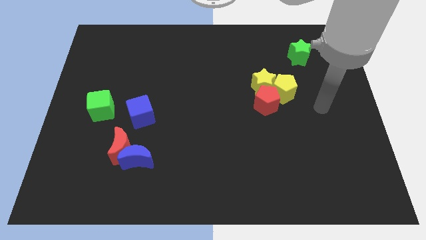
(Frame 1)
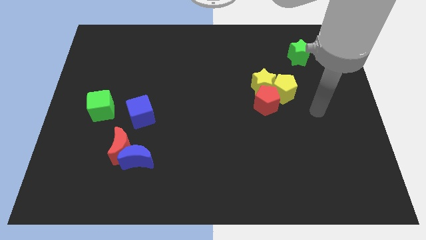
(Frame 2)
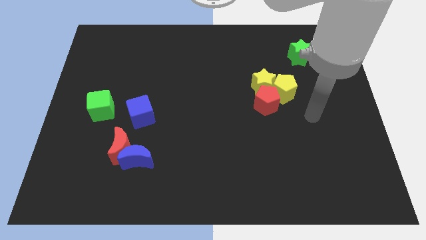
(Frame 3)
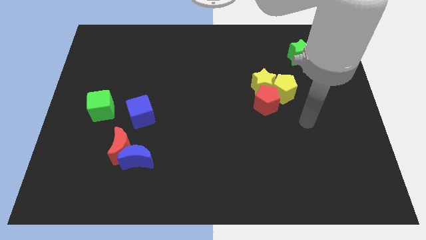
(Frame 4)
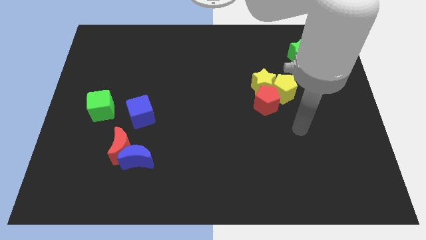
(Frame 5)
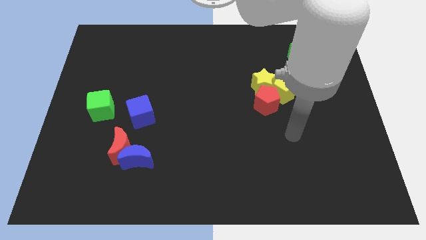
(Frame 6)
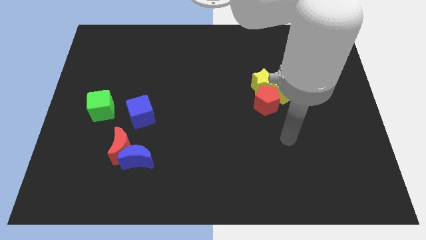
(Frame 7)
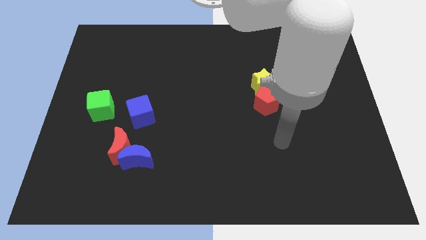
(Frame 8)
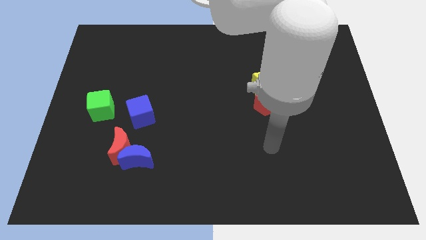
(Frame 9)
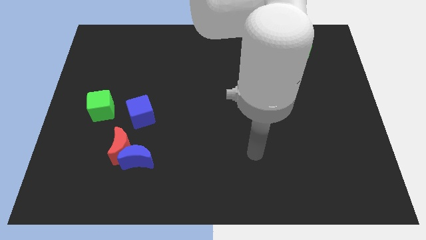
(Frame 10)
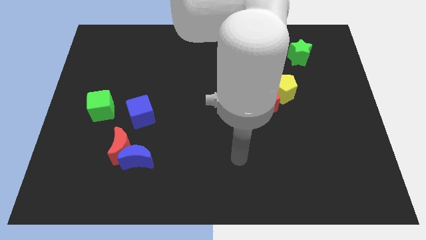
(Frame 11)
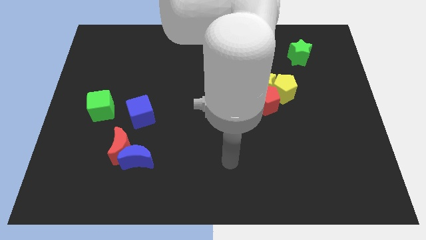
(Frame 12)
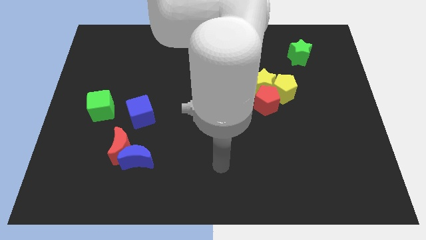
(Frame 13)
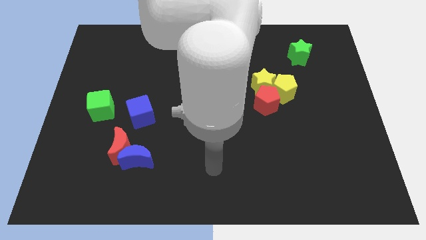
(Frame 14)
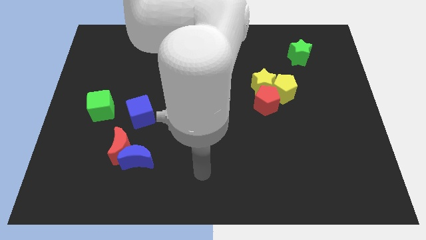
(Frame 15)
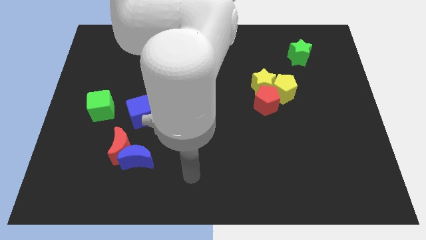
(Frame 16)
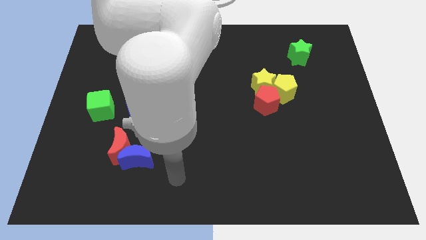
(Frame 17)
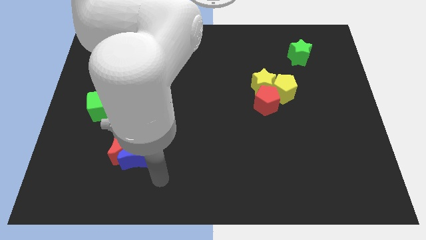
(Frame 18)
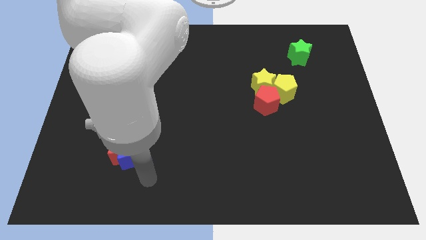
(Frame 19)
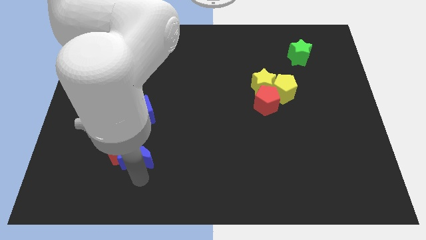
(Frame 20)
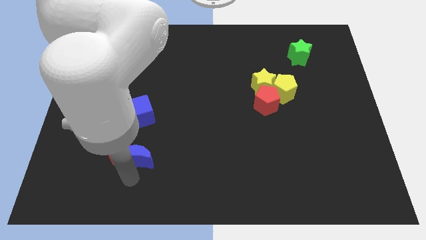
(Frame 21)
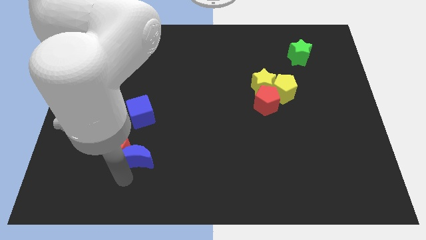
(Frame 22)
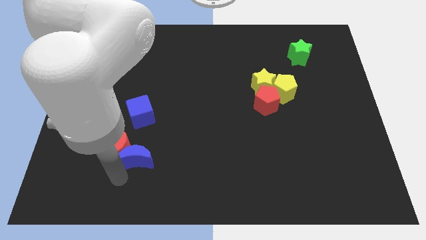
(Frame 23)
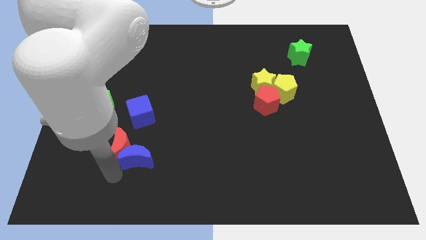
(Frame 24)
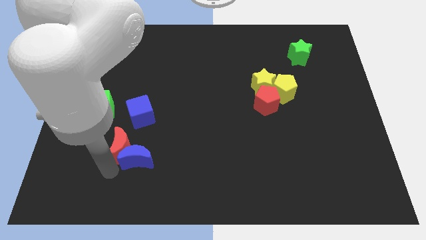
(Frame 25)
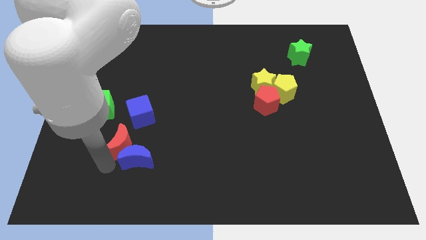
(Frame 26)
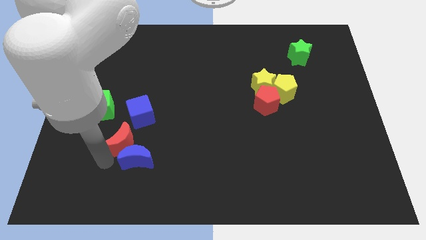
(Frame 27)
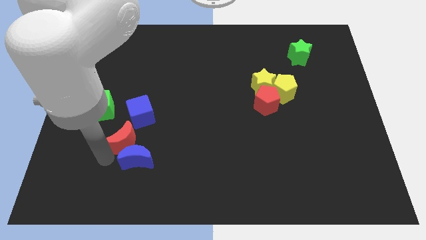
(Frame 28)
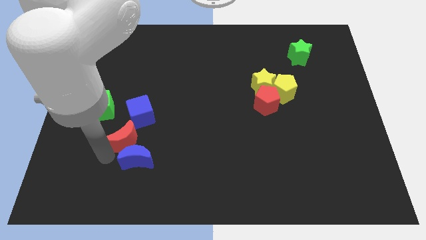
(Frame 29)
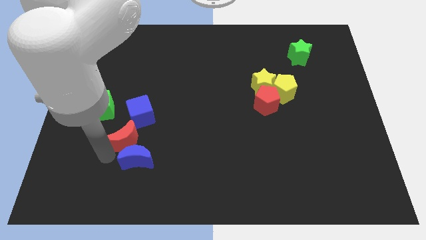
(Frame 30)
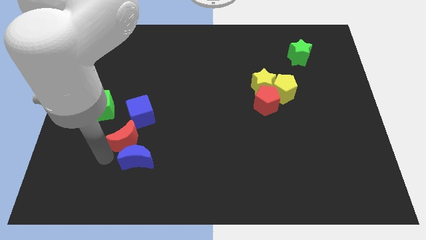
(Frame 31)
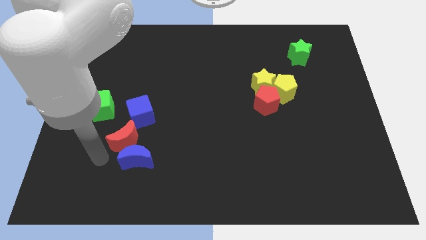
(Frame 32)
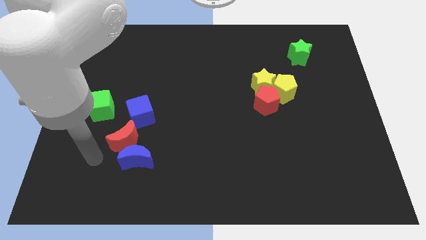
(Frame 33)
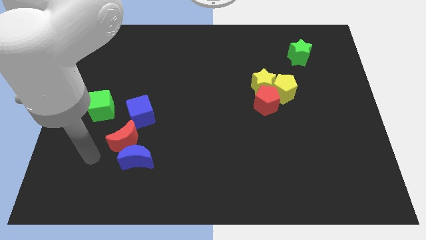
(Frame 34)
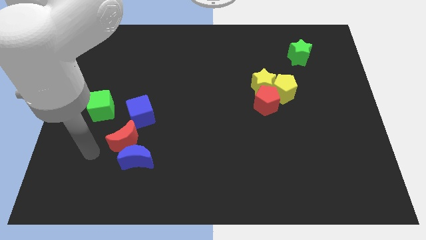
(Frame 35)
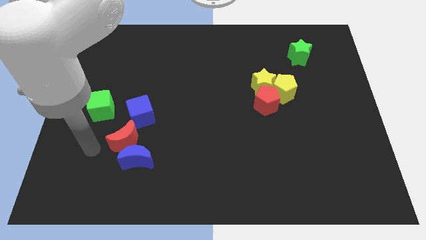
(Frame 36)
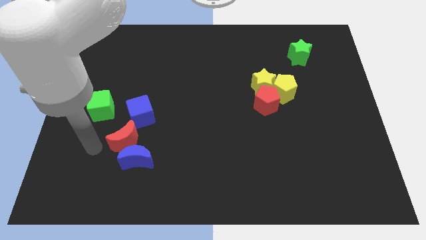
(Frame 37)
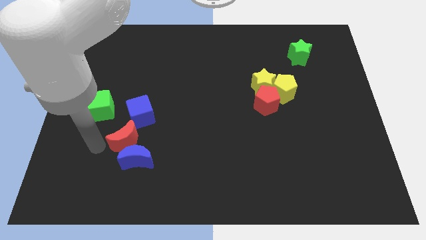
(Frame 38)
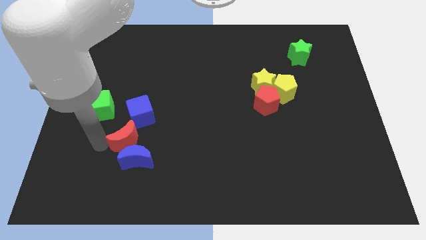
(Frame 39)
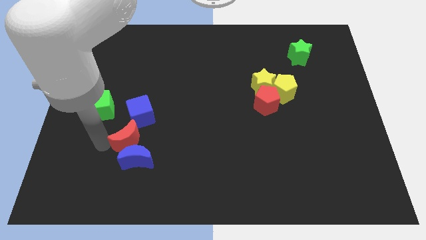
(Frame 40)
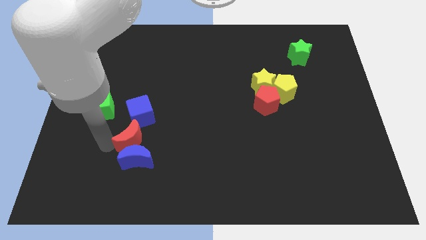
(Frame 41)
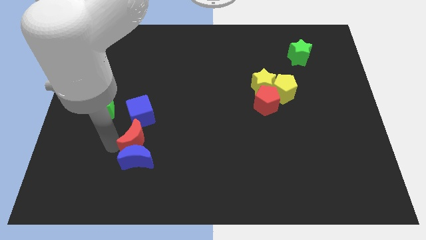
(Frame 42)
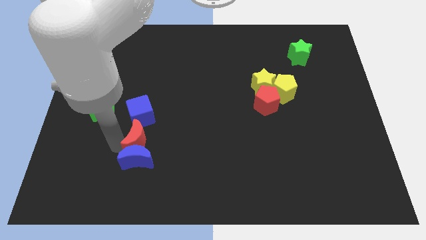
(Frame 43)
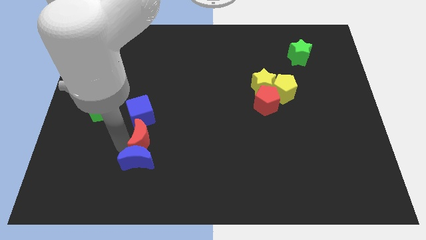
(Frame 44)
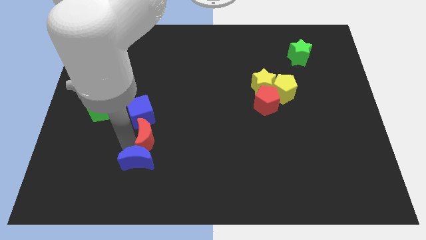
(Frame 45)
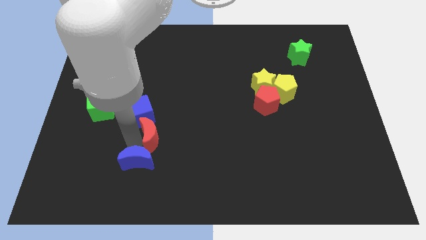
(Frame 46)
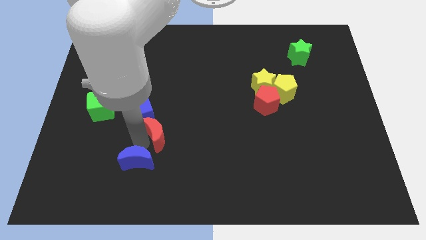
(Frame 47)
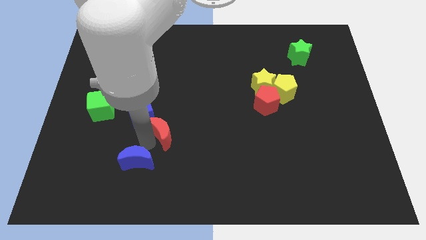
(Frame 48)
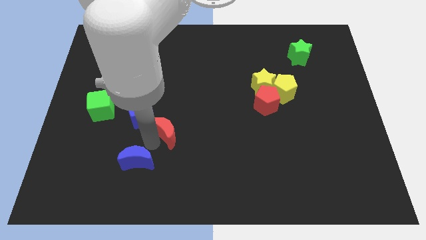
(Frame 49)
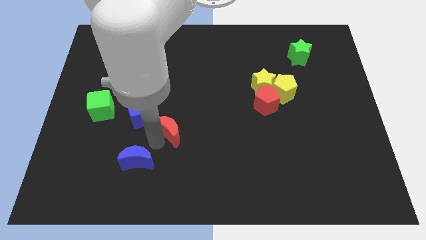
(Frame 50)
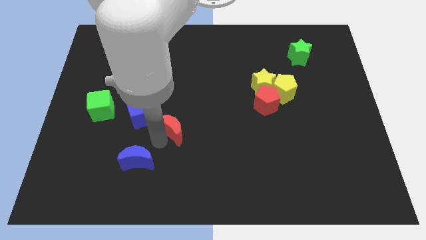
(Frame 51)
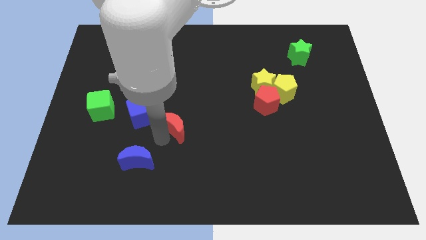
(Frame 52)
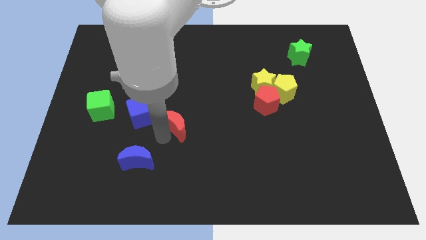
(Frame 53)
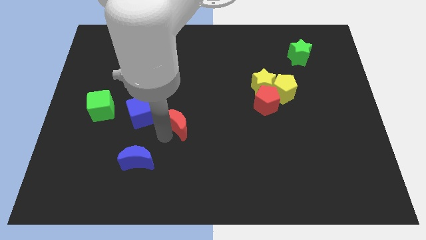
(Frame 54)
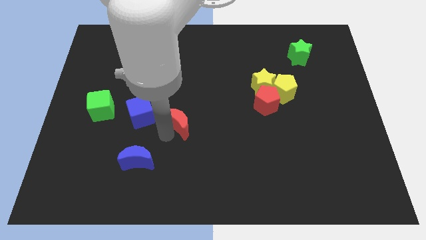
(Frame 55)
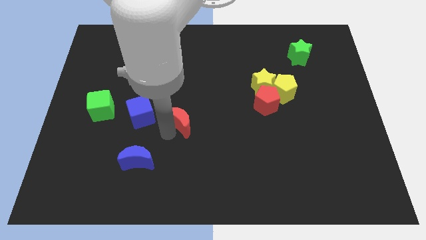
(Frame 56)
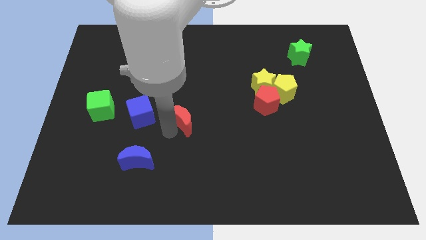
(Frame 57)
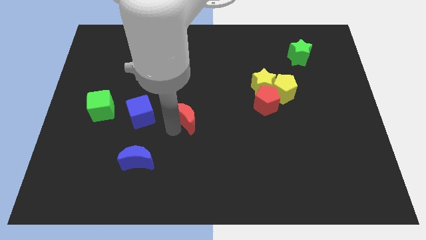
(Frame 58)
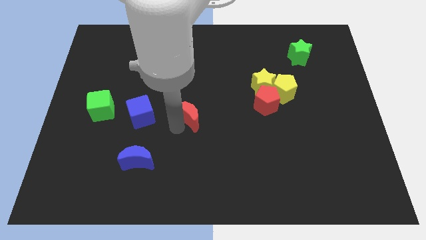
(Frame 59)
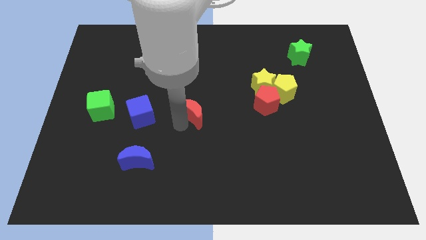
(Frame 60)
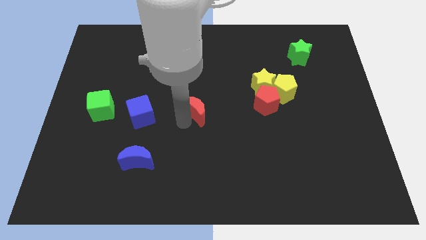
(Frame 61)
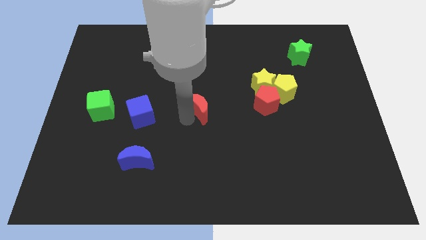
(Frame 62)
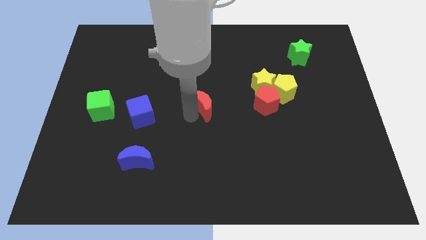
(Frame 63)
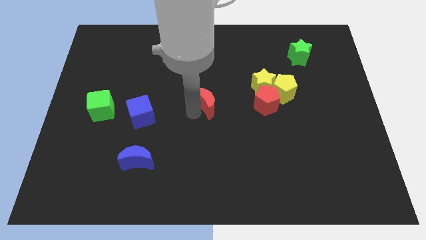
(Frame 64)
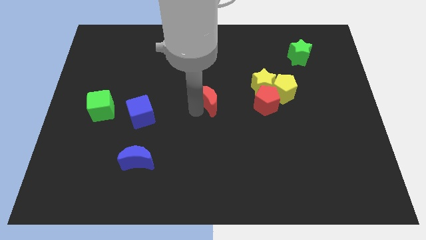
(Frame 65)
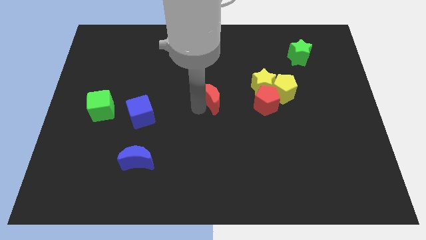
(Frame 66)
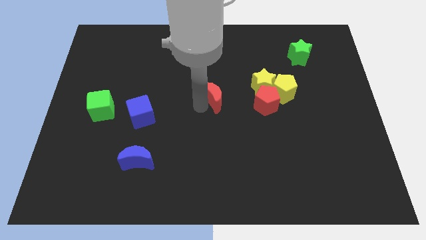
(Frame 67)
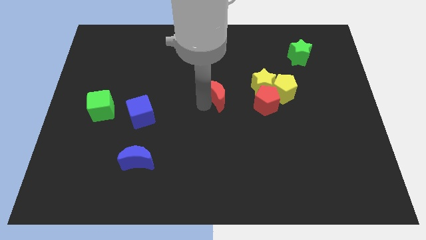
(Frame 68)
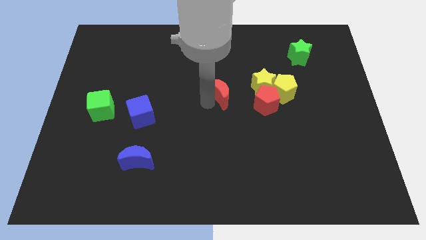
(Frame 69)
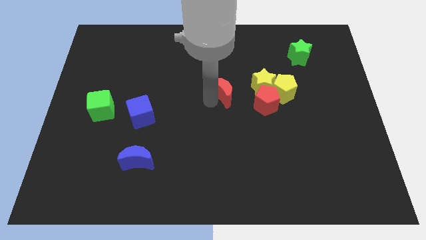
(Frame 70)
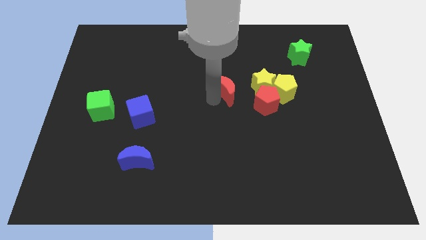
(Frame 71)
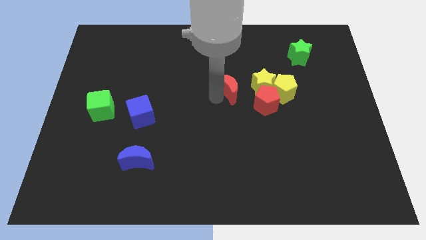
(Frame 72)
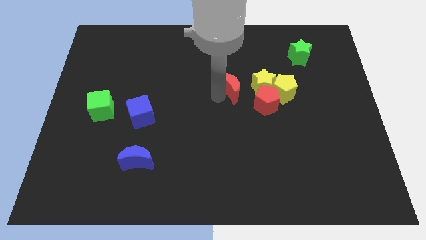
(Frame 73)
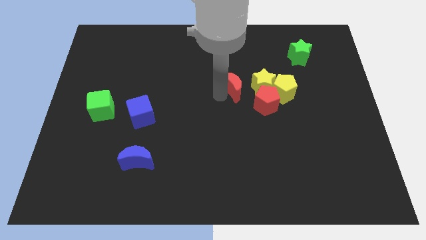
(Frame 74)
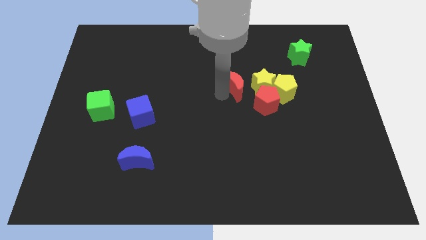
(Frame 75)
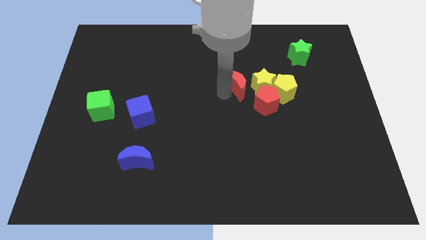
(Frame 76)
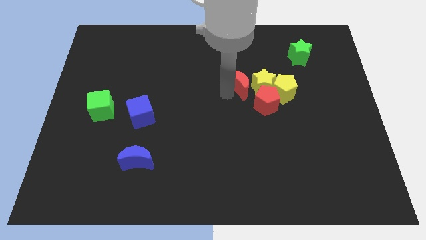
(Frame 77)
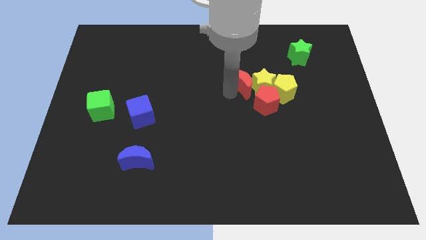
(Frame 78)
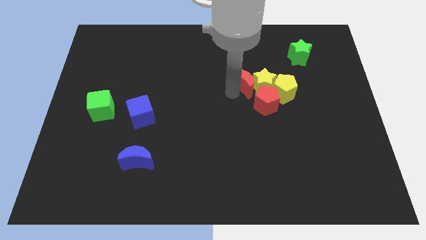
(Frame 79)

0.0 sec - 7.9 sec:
push the red moon to the yellow star

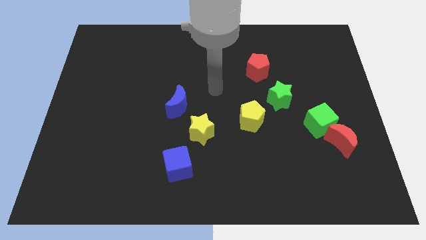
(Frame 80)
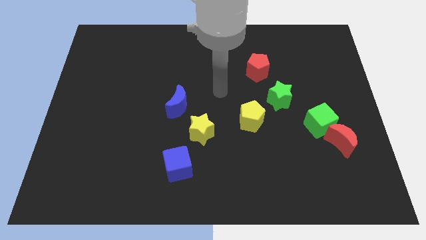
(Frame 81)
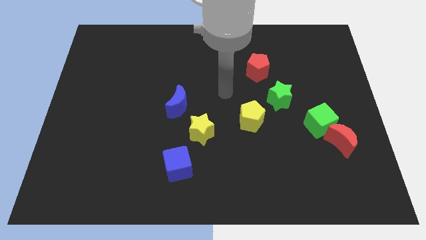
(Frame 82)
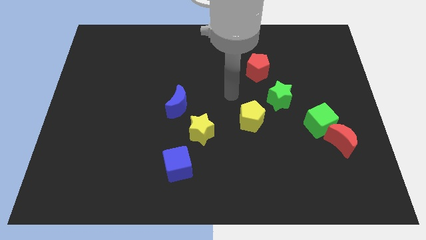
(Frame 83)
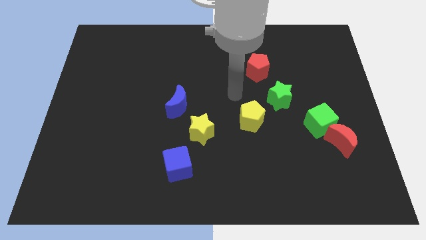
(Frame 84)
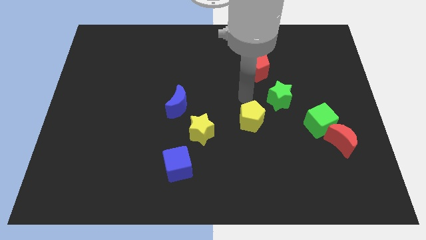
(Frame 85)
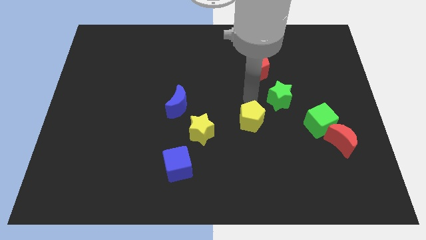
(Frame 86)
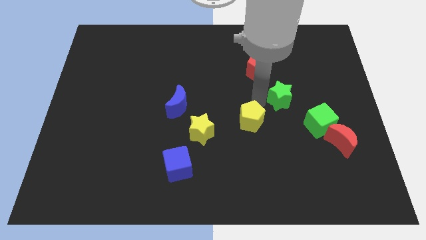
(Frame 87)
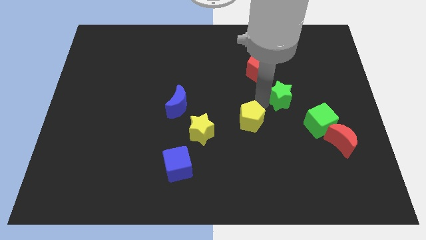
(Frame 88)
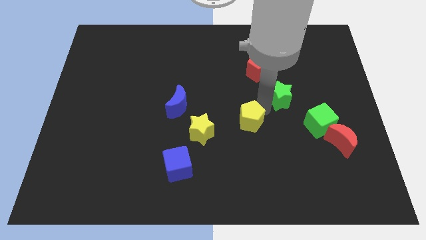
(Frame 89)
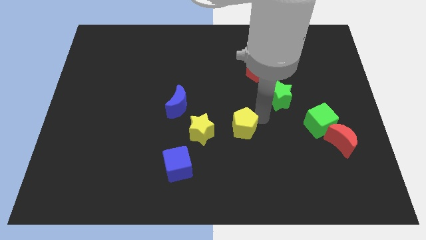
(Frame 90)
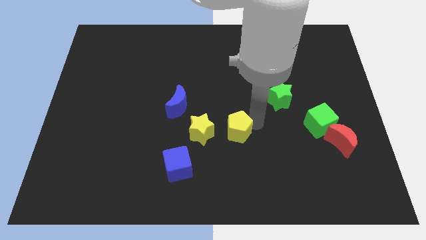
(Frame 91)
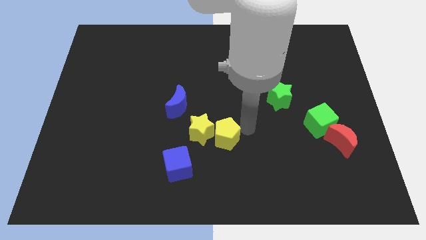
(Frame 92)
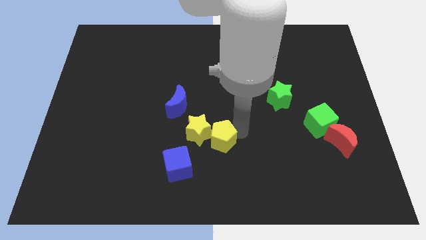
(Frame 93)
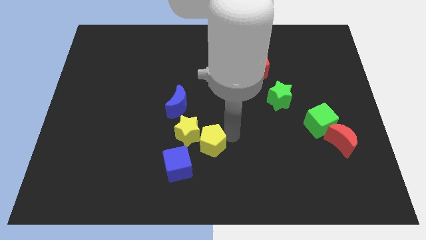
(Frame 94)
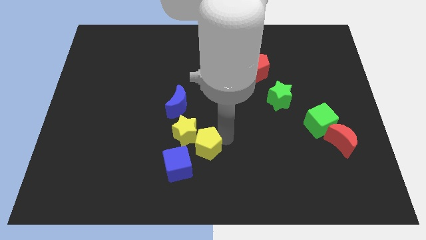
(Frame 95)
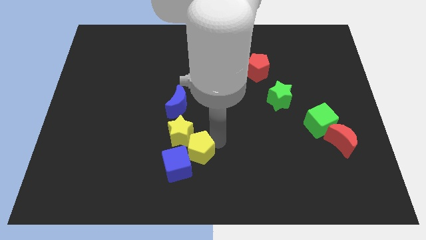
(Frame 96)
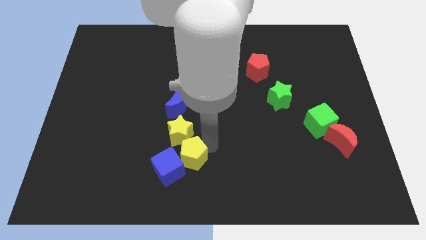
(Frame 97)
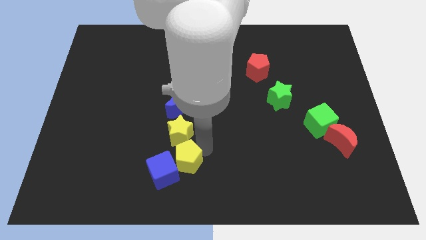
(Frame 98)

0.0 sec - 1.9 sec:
put the yellow pentagon close to the blue cube
